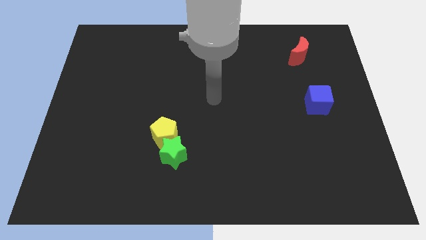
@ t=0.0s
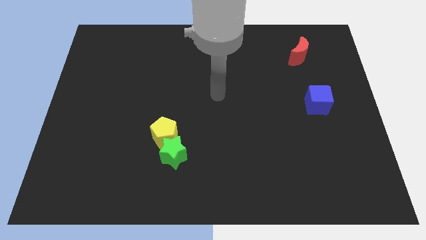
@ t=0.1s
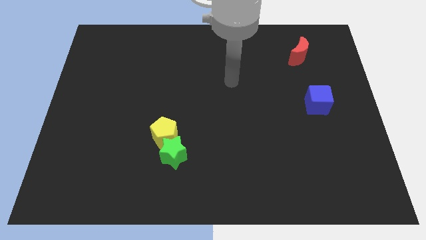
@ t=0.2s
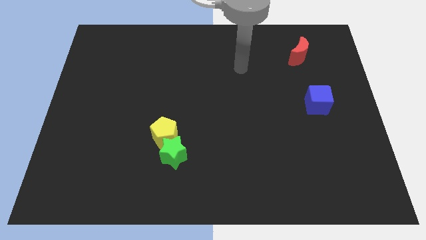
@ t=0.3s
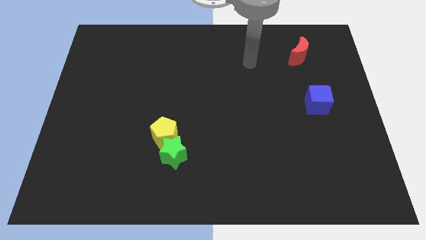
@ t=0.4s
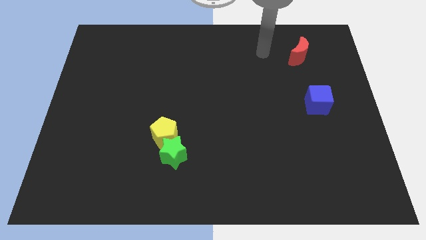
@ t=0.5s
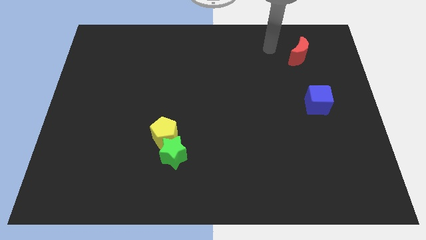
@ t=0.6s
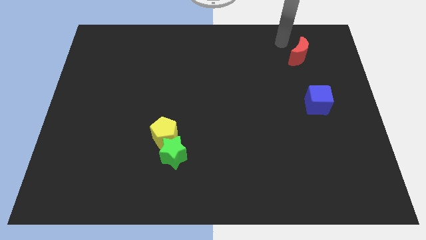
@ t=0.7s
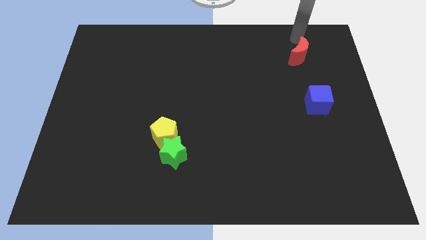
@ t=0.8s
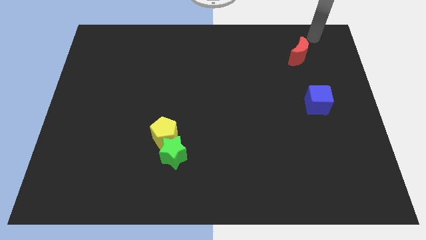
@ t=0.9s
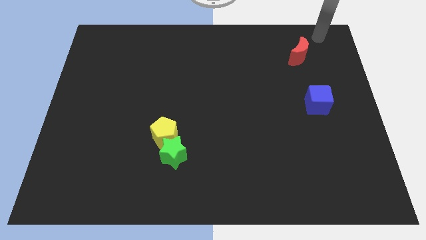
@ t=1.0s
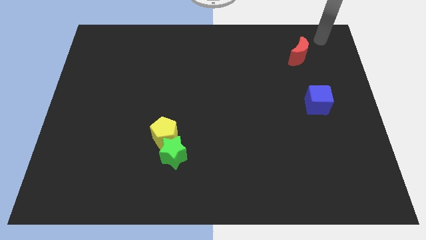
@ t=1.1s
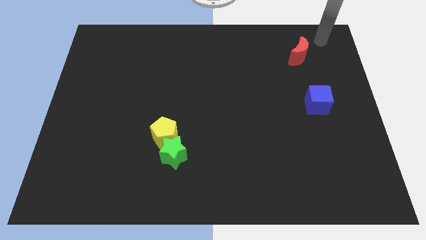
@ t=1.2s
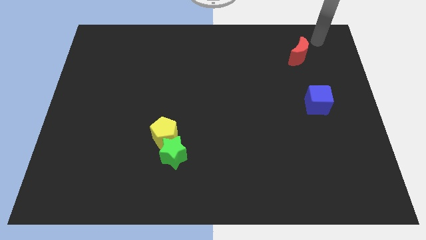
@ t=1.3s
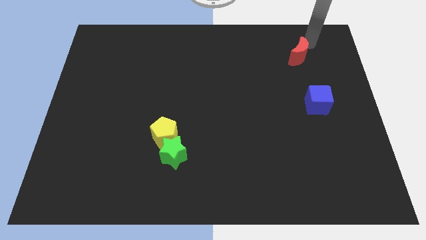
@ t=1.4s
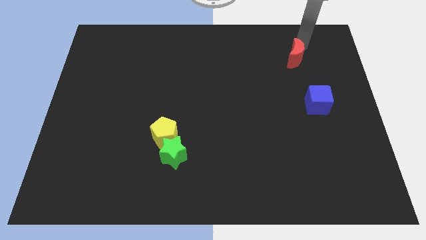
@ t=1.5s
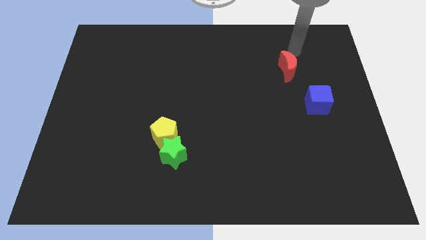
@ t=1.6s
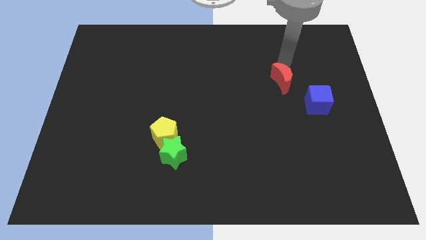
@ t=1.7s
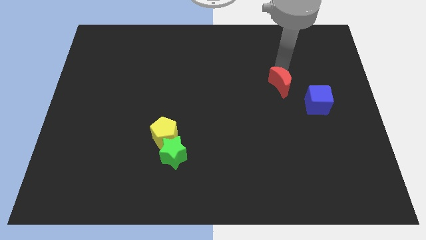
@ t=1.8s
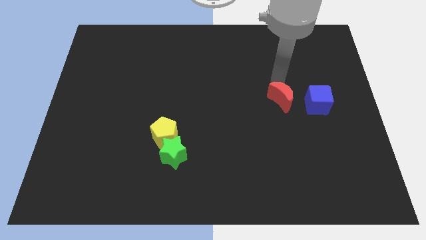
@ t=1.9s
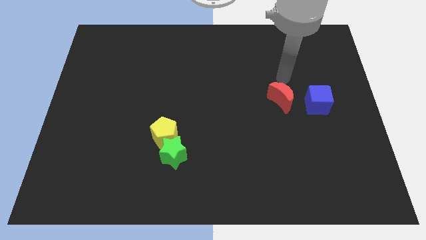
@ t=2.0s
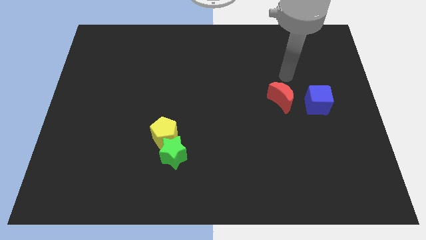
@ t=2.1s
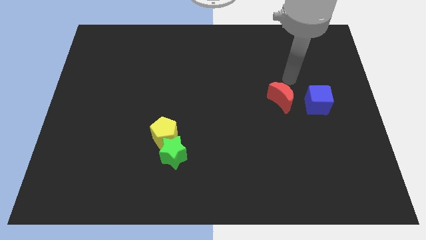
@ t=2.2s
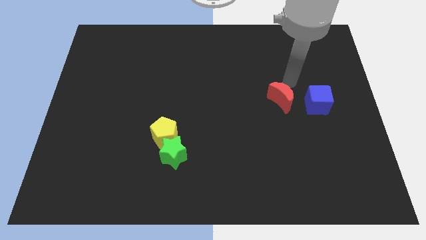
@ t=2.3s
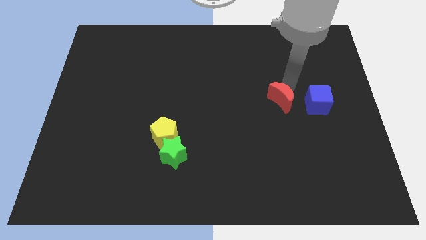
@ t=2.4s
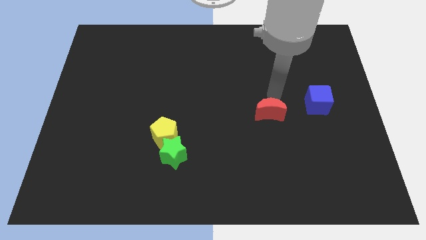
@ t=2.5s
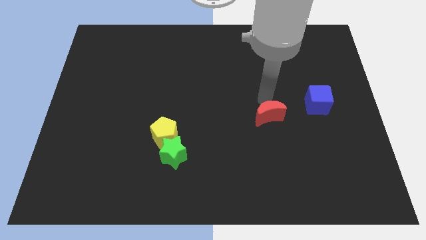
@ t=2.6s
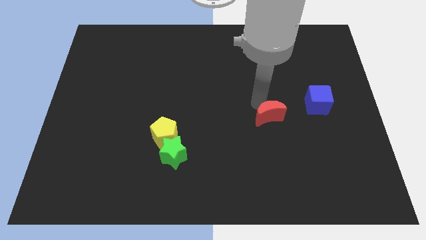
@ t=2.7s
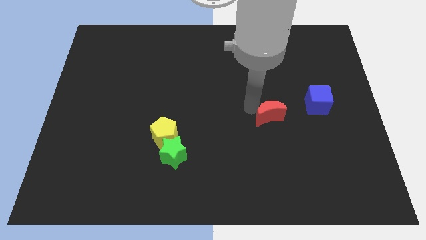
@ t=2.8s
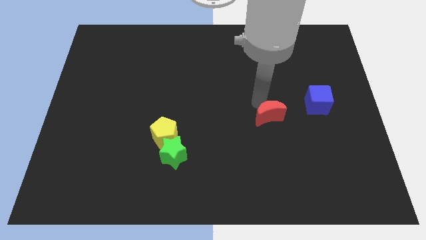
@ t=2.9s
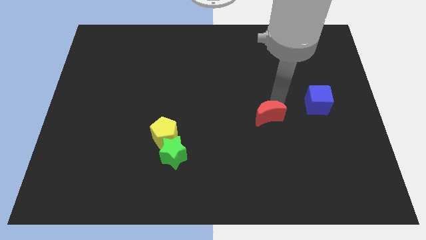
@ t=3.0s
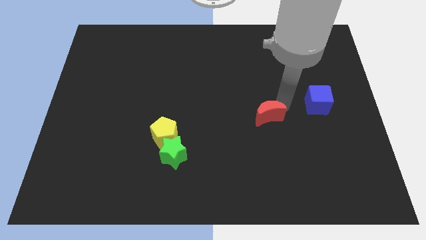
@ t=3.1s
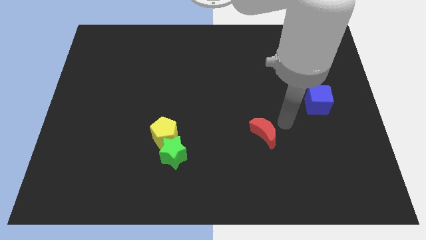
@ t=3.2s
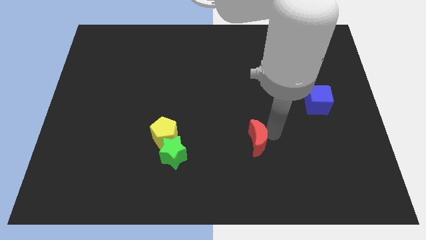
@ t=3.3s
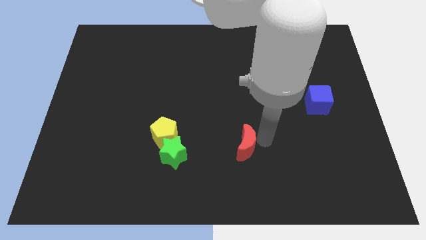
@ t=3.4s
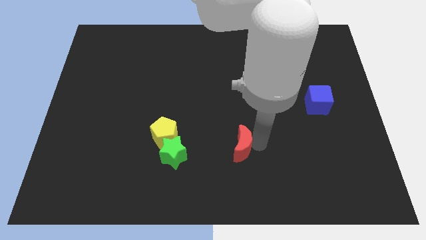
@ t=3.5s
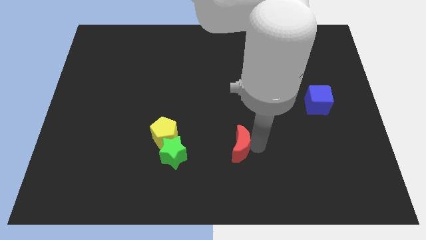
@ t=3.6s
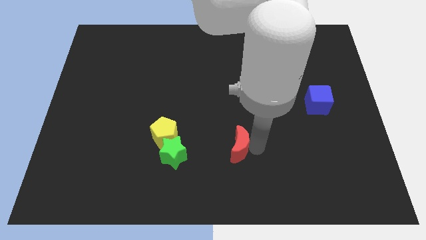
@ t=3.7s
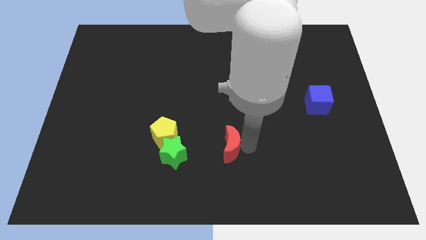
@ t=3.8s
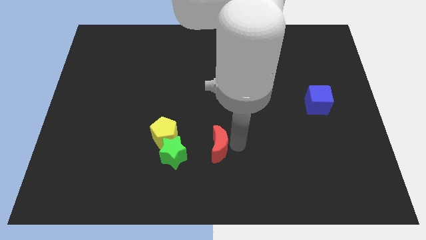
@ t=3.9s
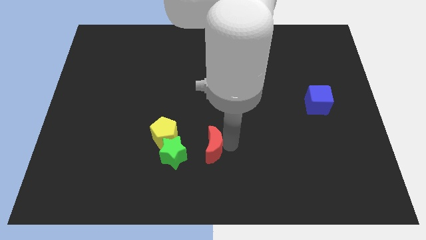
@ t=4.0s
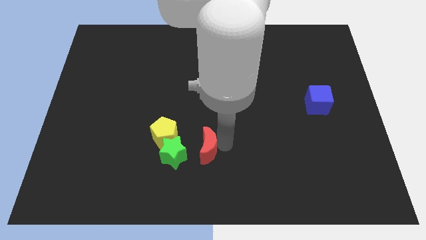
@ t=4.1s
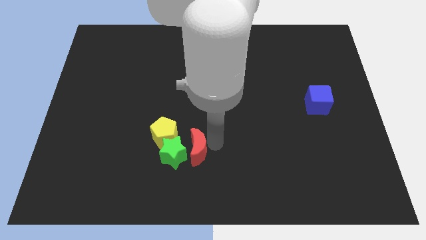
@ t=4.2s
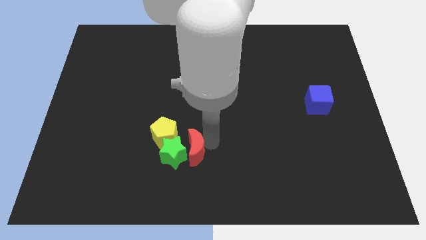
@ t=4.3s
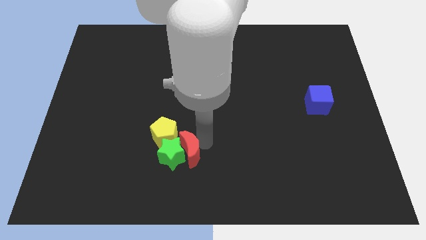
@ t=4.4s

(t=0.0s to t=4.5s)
move the red block towards the green block

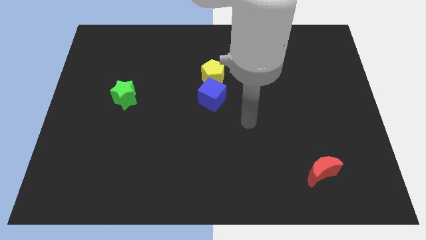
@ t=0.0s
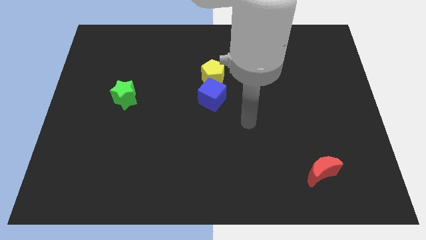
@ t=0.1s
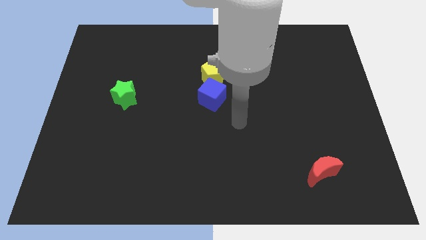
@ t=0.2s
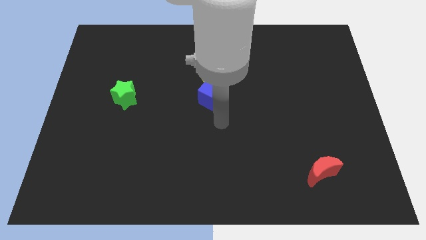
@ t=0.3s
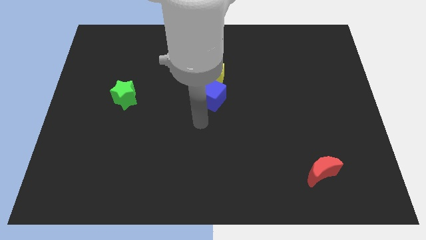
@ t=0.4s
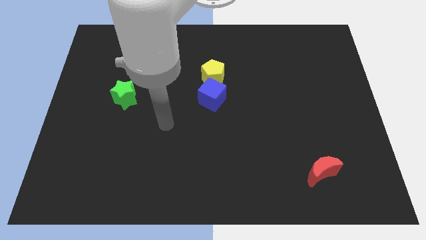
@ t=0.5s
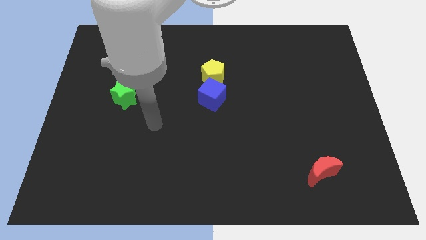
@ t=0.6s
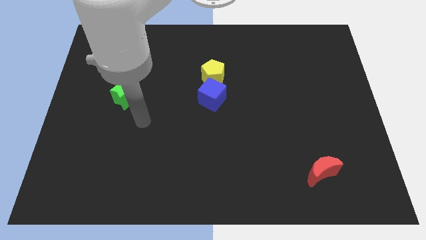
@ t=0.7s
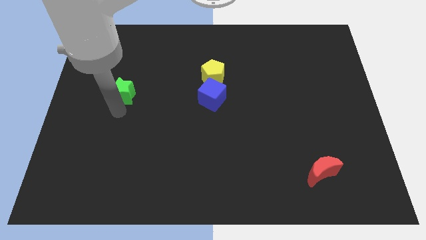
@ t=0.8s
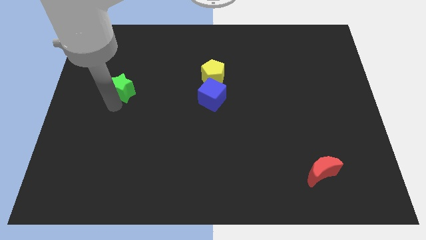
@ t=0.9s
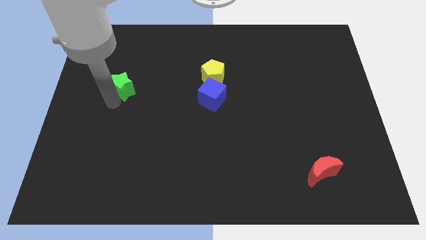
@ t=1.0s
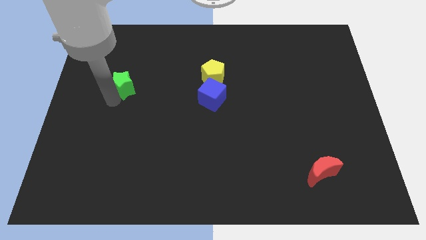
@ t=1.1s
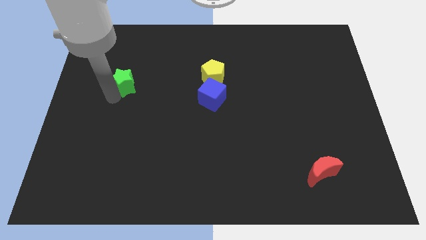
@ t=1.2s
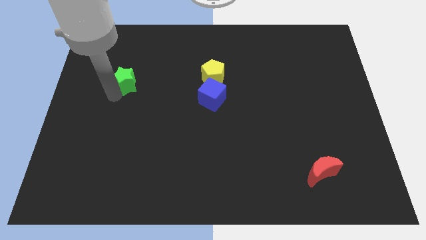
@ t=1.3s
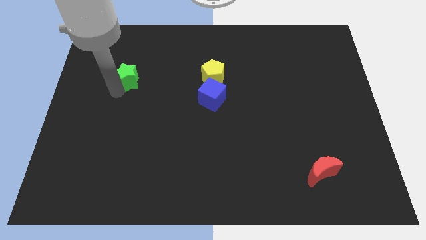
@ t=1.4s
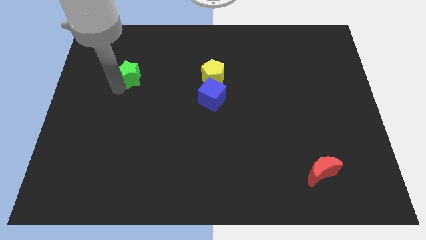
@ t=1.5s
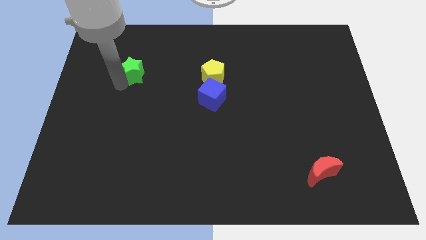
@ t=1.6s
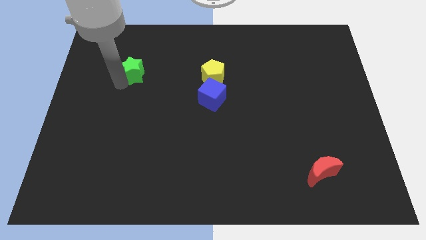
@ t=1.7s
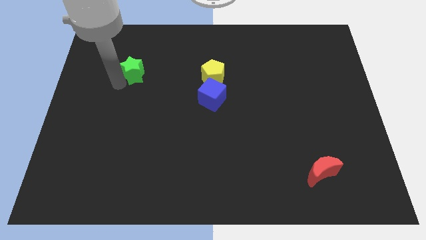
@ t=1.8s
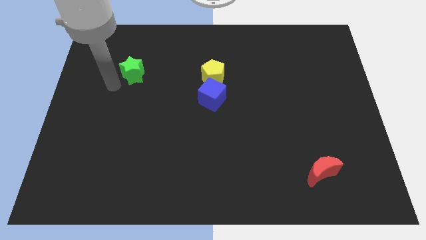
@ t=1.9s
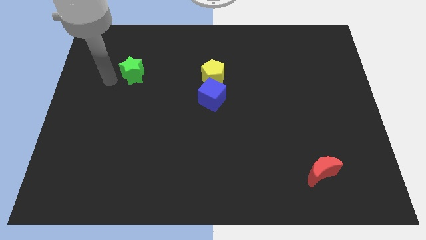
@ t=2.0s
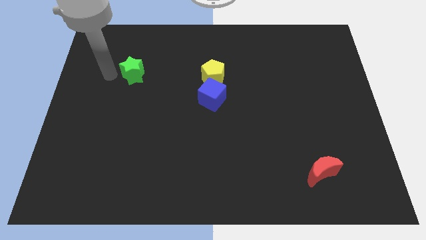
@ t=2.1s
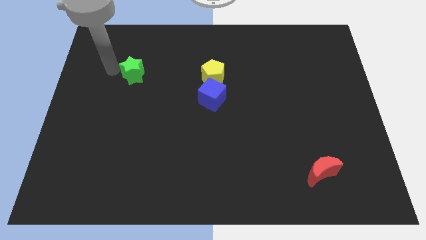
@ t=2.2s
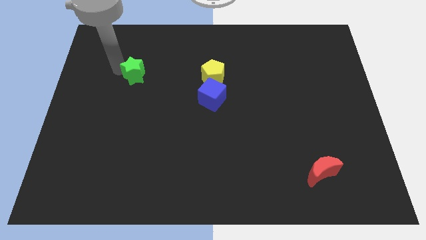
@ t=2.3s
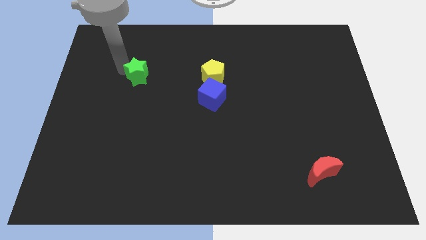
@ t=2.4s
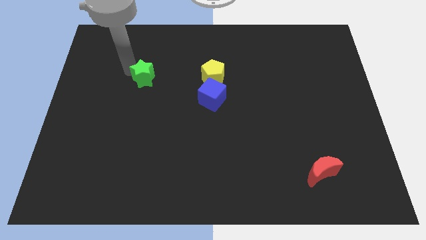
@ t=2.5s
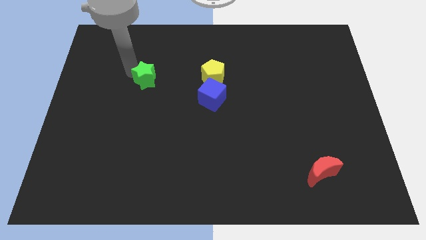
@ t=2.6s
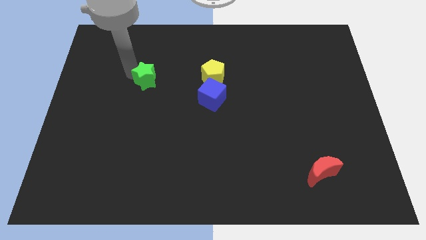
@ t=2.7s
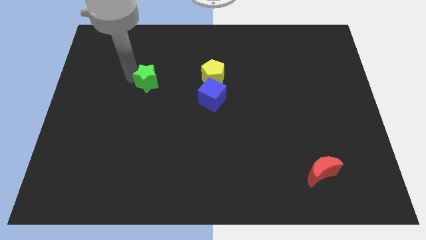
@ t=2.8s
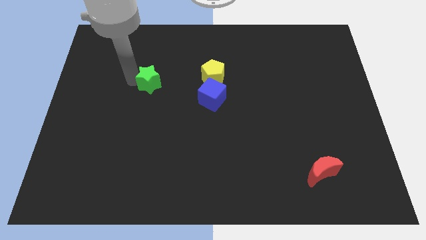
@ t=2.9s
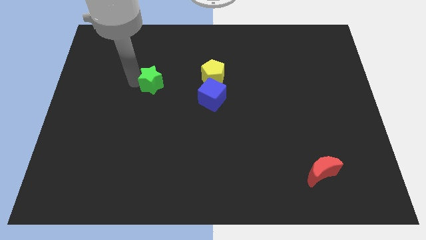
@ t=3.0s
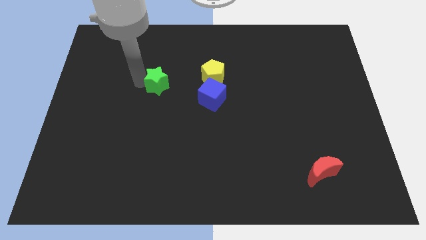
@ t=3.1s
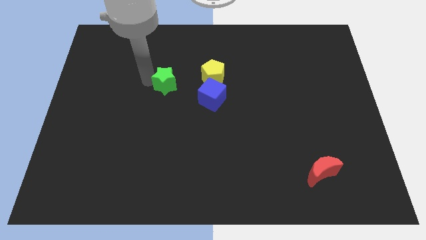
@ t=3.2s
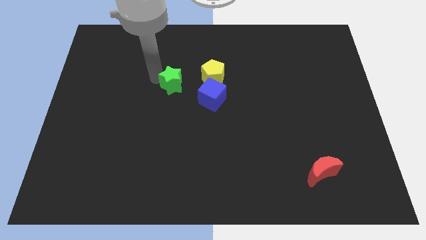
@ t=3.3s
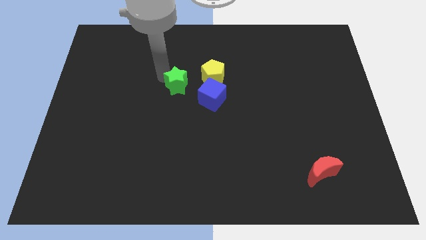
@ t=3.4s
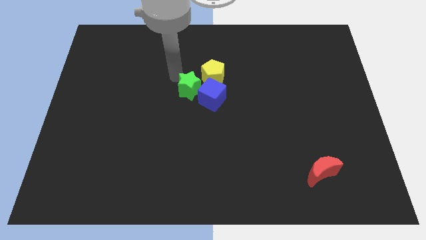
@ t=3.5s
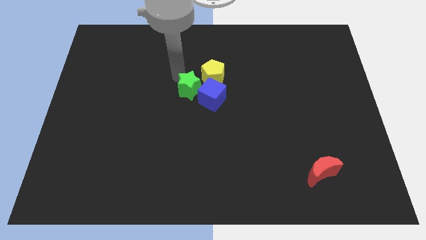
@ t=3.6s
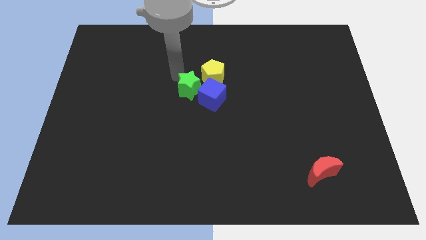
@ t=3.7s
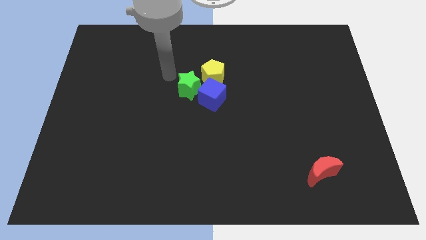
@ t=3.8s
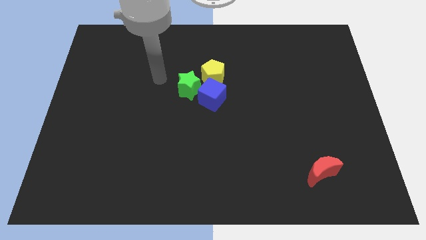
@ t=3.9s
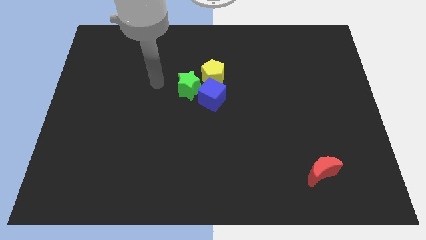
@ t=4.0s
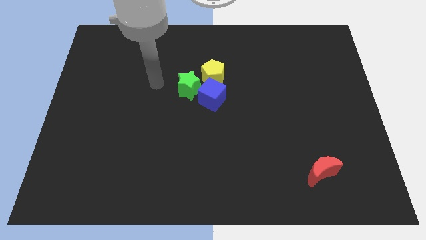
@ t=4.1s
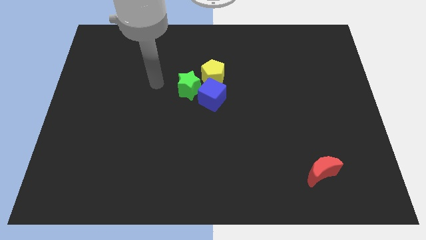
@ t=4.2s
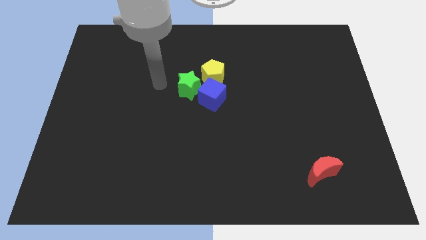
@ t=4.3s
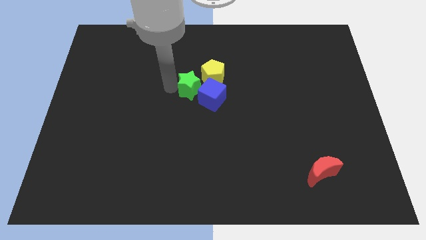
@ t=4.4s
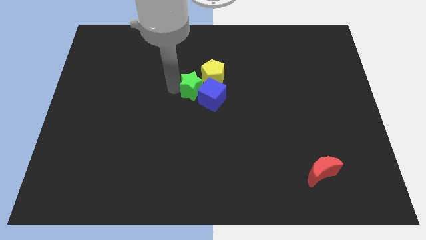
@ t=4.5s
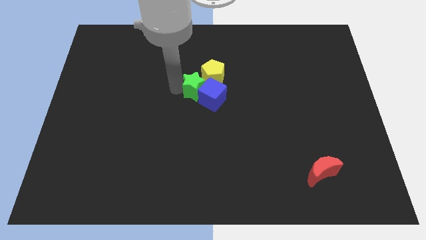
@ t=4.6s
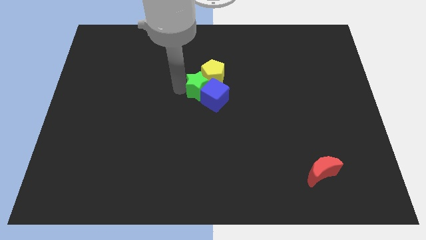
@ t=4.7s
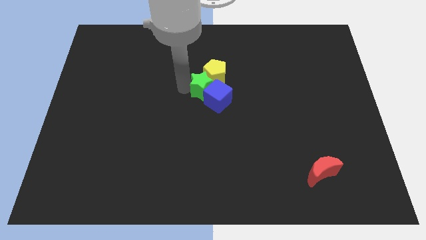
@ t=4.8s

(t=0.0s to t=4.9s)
move the green block towards the yellow block
